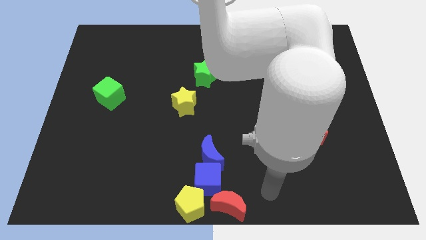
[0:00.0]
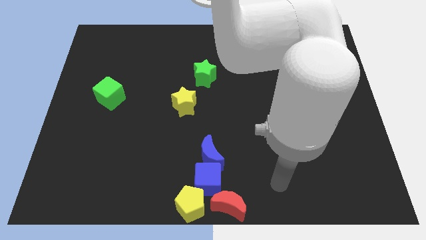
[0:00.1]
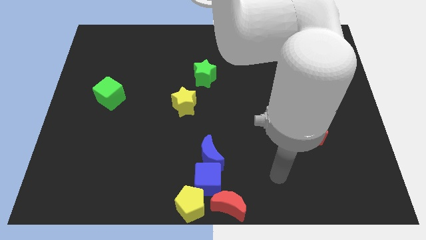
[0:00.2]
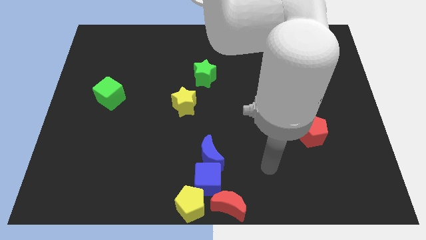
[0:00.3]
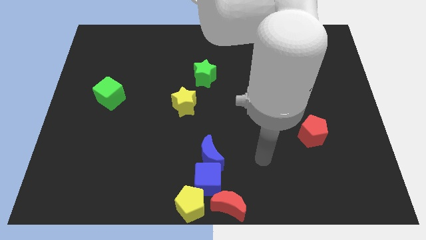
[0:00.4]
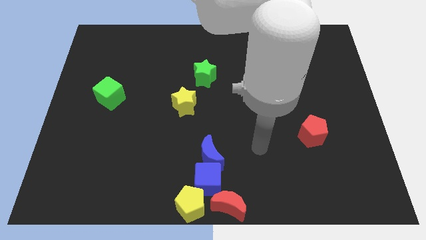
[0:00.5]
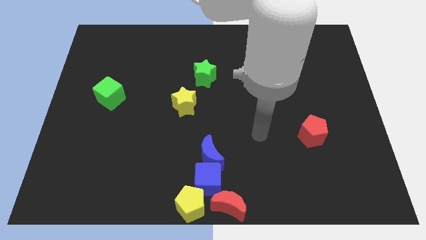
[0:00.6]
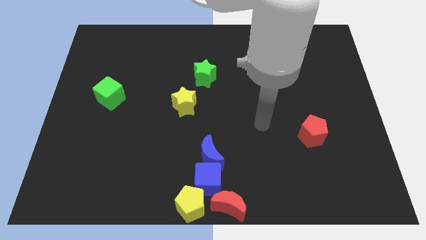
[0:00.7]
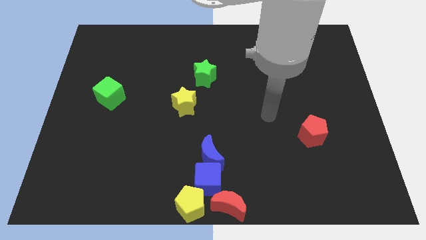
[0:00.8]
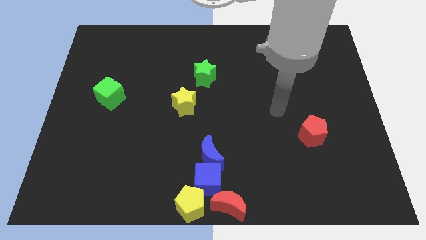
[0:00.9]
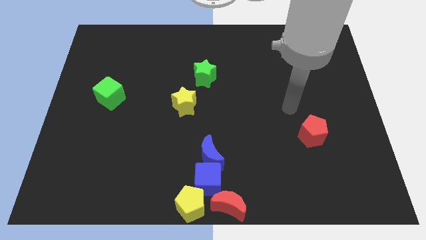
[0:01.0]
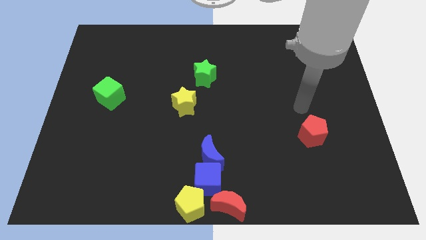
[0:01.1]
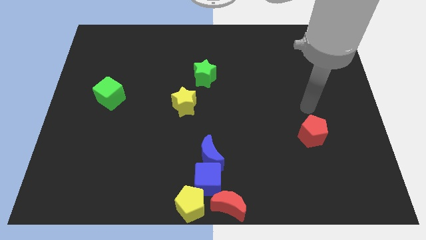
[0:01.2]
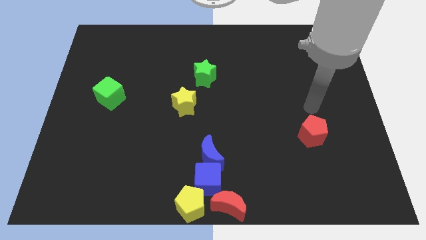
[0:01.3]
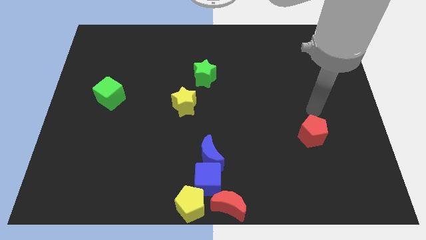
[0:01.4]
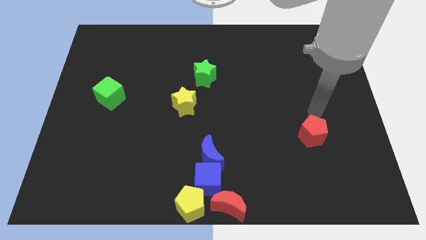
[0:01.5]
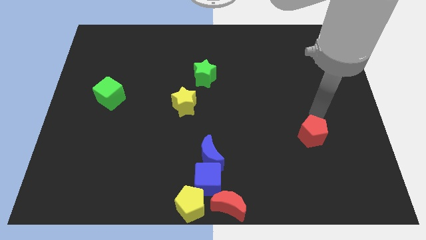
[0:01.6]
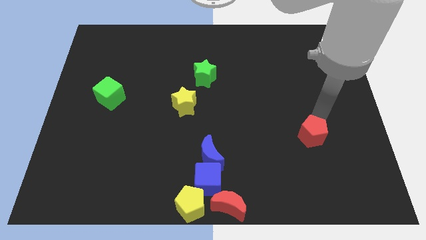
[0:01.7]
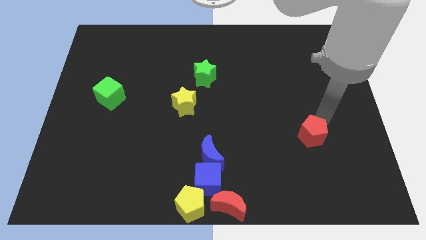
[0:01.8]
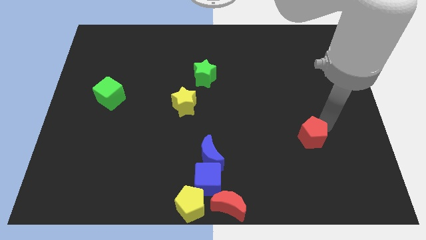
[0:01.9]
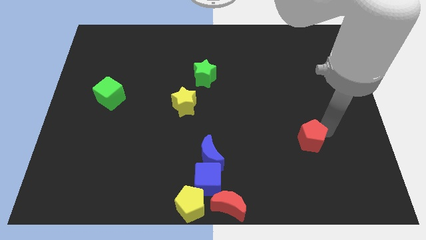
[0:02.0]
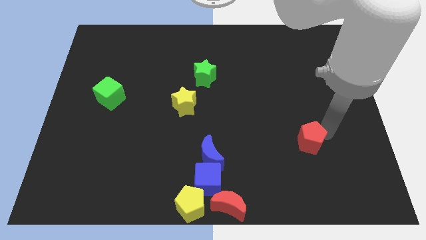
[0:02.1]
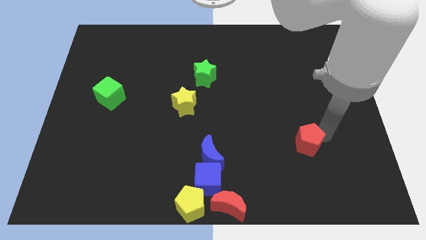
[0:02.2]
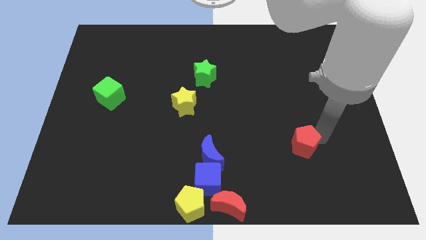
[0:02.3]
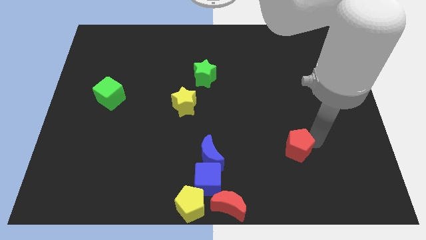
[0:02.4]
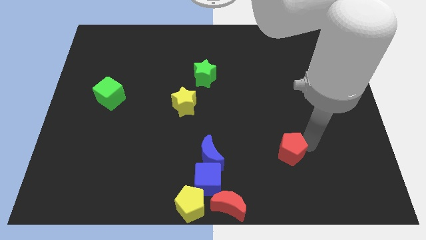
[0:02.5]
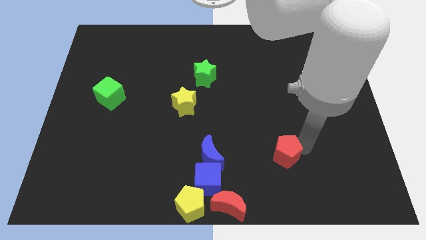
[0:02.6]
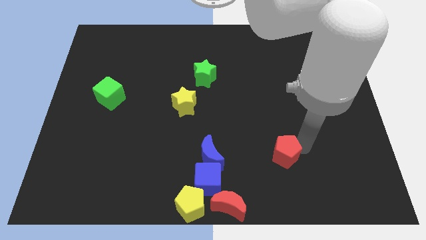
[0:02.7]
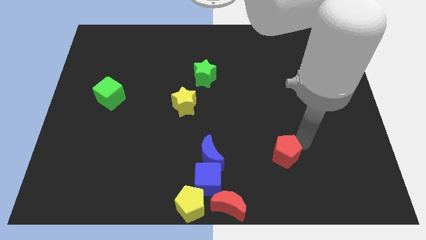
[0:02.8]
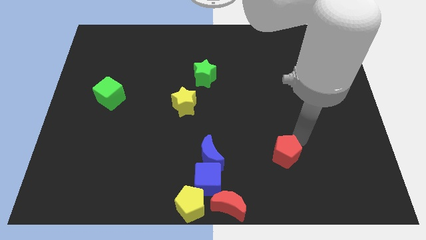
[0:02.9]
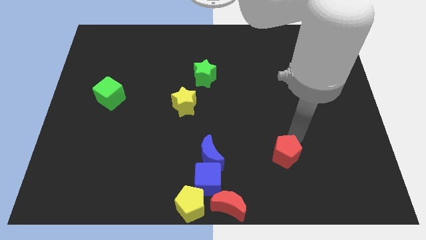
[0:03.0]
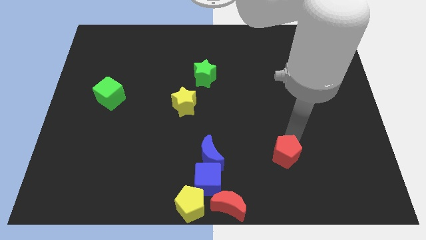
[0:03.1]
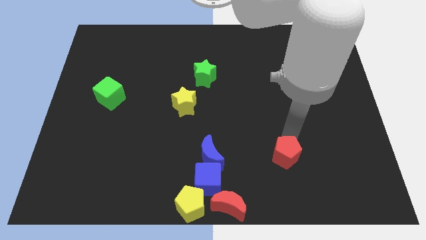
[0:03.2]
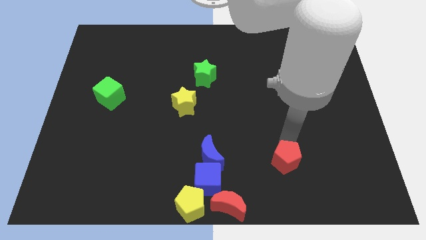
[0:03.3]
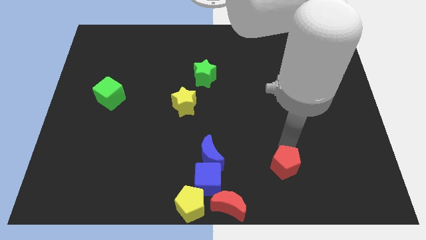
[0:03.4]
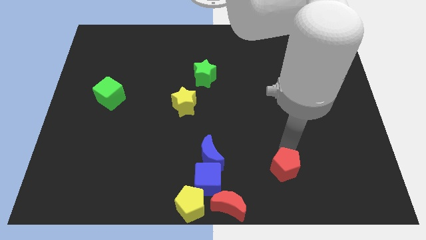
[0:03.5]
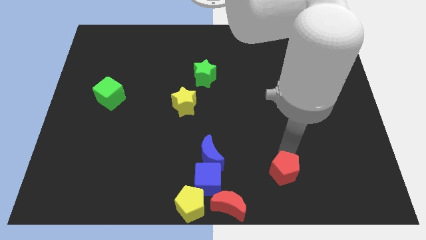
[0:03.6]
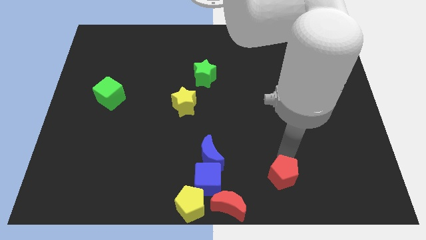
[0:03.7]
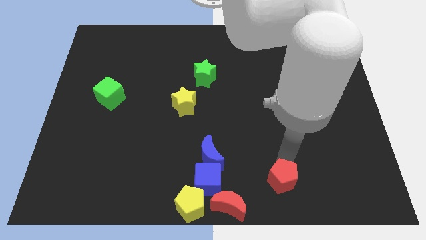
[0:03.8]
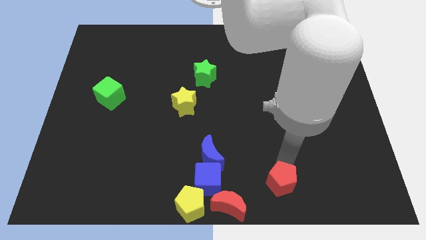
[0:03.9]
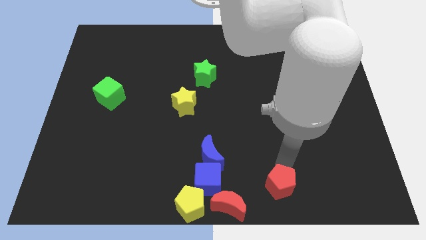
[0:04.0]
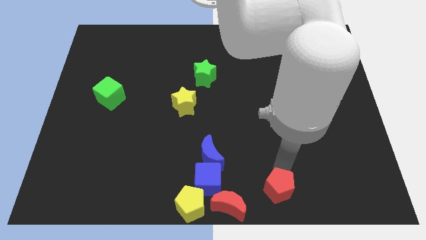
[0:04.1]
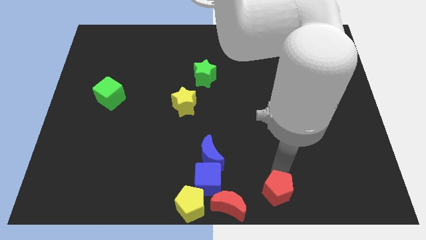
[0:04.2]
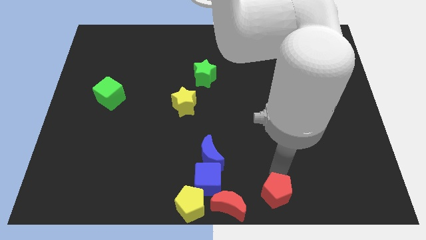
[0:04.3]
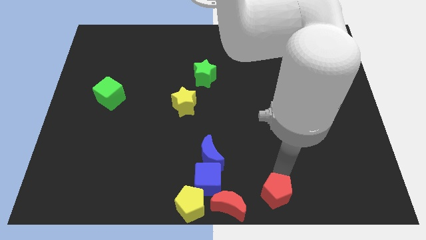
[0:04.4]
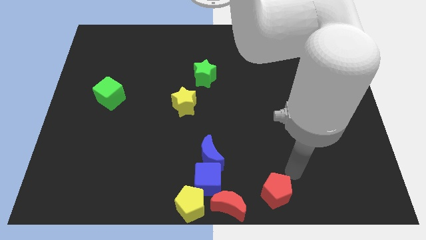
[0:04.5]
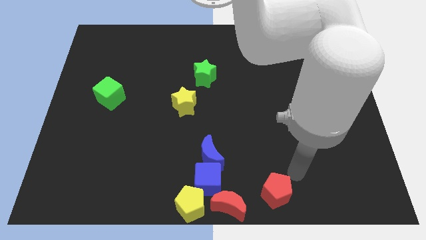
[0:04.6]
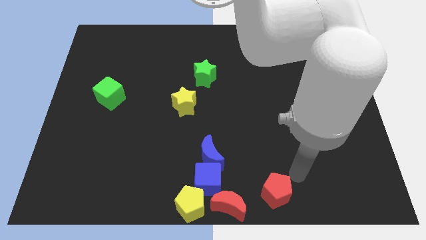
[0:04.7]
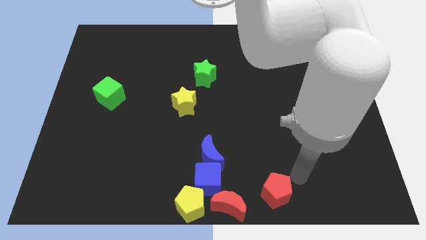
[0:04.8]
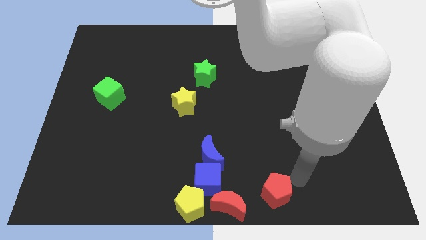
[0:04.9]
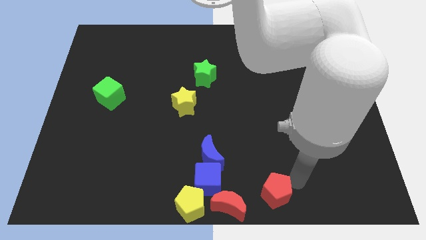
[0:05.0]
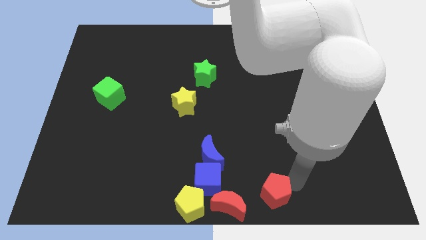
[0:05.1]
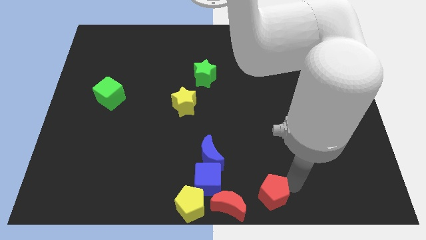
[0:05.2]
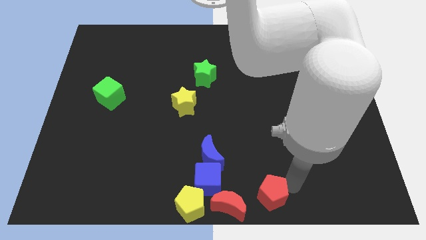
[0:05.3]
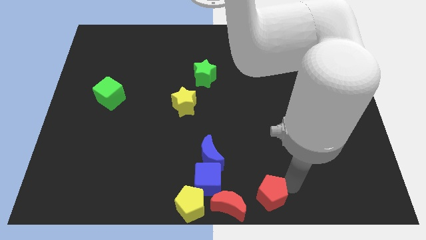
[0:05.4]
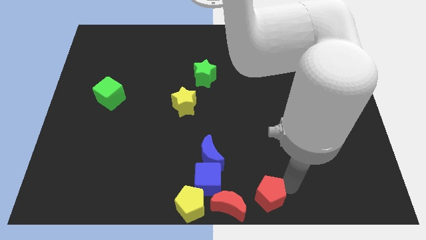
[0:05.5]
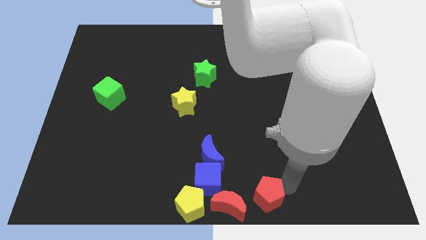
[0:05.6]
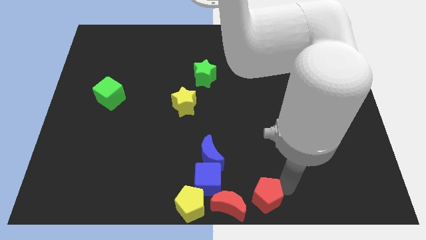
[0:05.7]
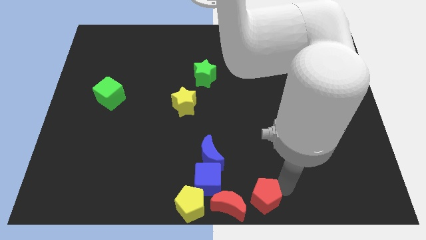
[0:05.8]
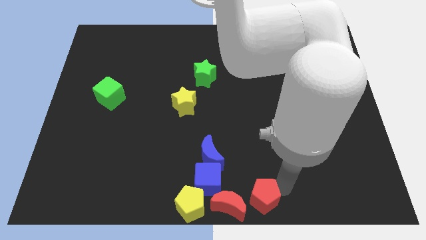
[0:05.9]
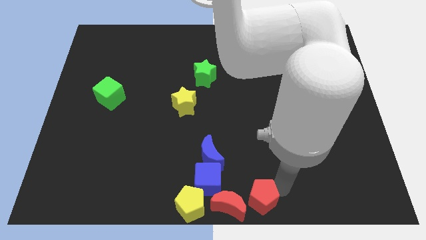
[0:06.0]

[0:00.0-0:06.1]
move the red pentagon to the right of the red crescent

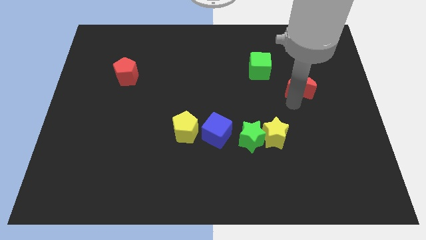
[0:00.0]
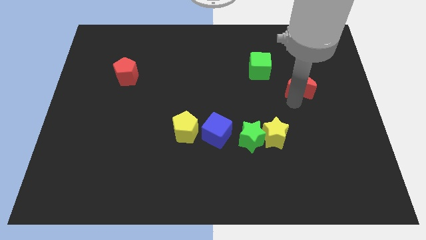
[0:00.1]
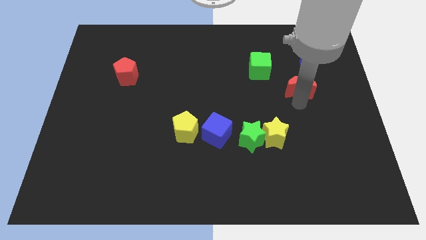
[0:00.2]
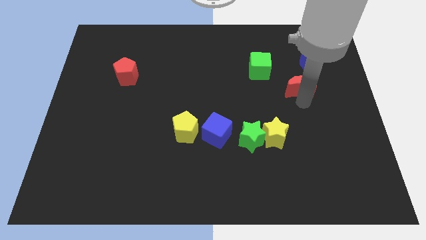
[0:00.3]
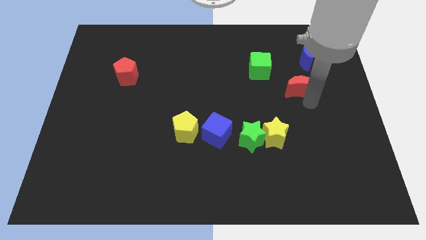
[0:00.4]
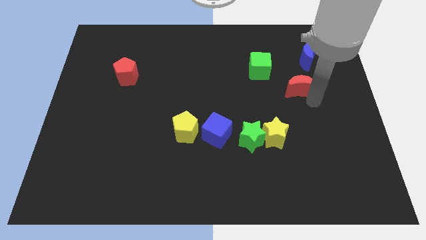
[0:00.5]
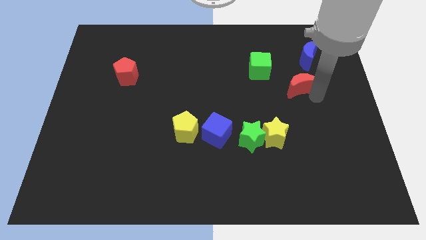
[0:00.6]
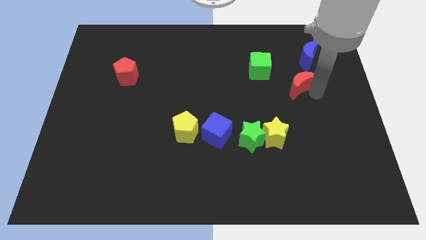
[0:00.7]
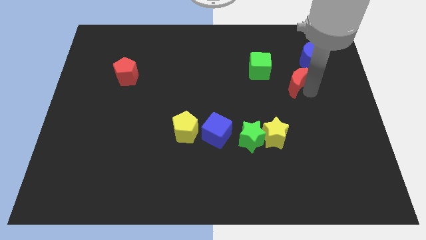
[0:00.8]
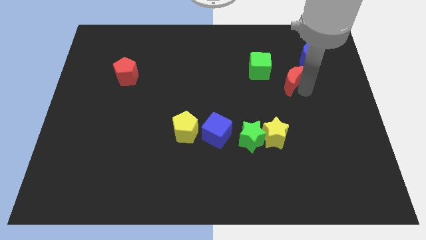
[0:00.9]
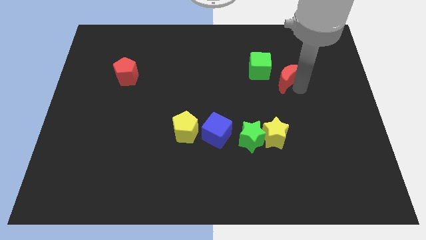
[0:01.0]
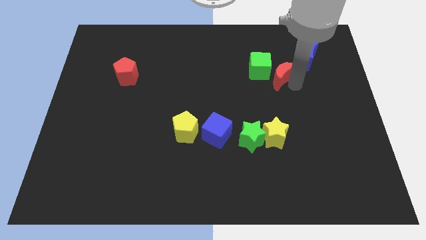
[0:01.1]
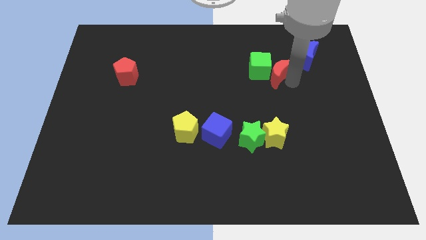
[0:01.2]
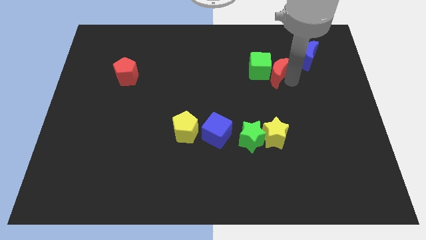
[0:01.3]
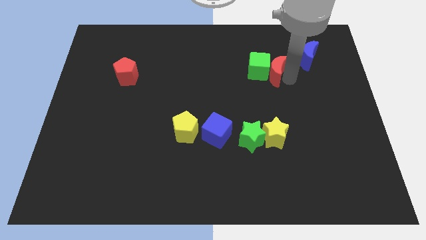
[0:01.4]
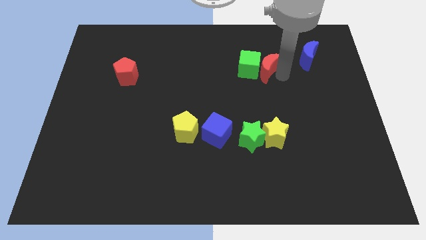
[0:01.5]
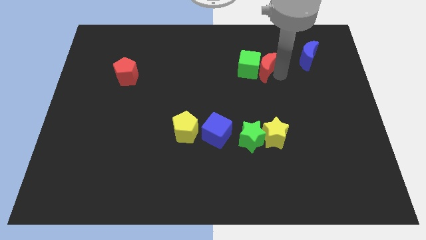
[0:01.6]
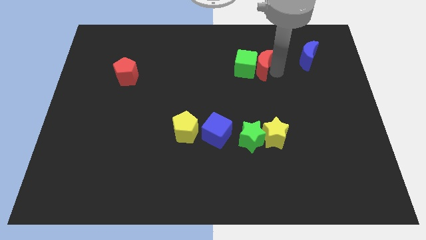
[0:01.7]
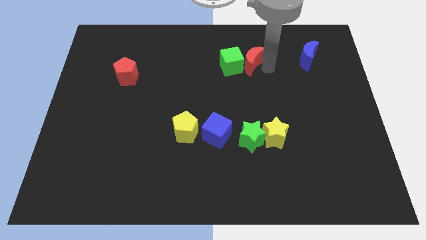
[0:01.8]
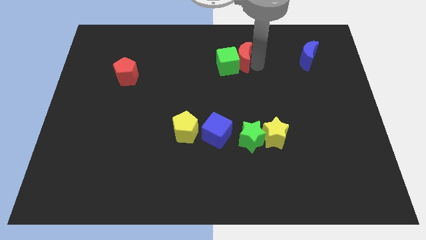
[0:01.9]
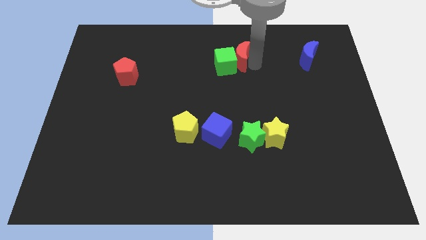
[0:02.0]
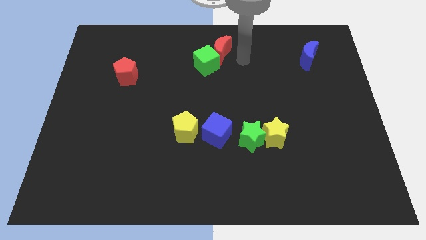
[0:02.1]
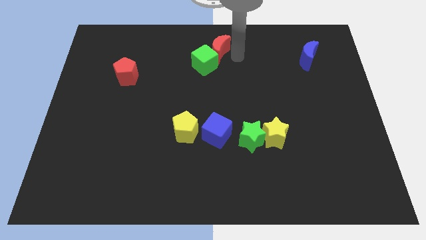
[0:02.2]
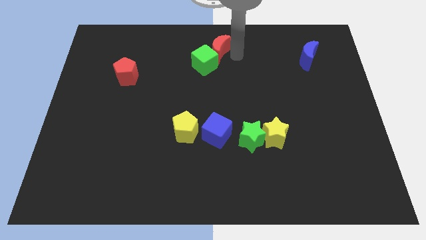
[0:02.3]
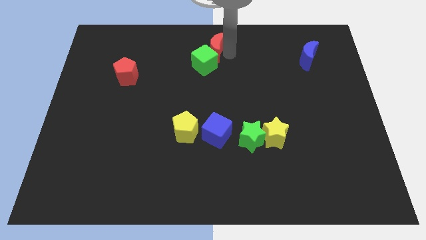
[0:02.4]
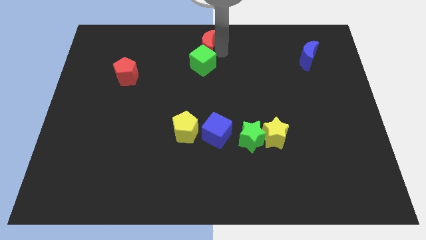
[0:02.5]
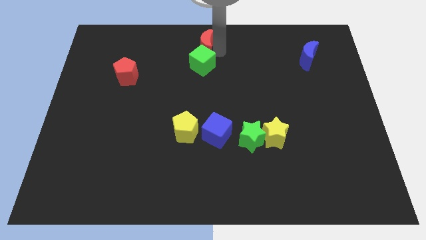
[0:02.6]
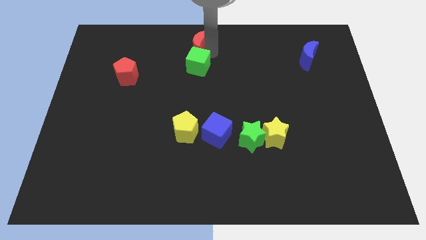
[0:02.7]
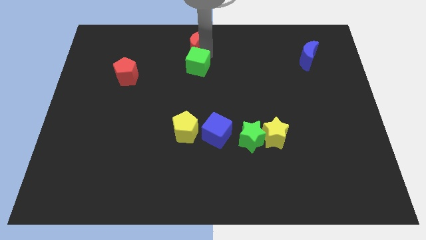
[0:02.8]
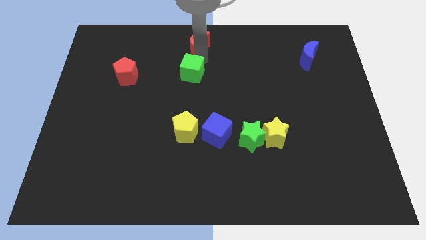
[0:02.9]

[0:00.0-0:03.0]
move red crescent and green cube to center top
